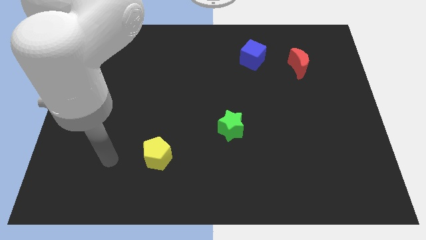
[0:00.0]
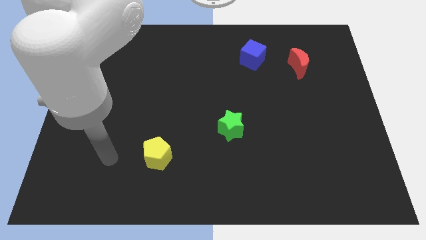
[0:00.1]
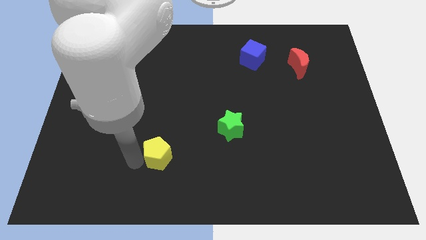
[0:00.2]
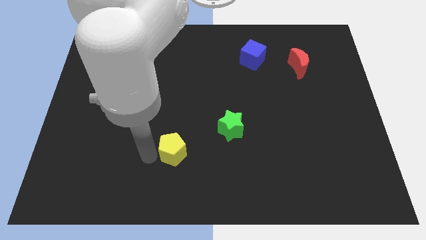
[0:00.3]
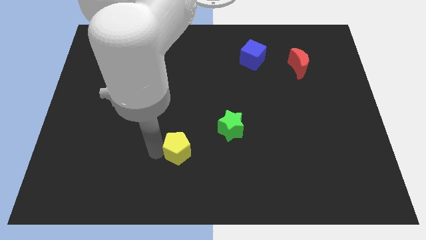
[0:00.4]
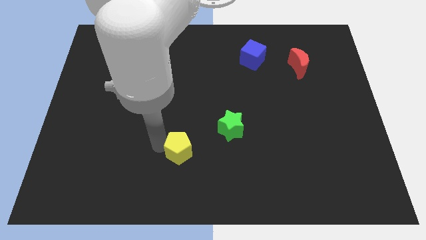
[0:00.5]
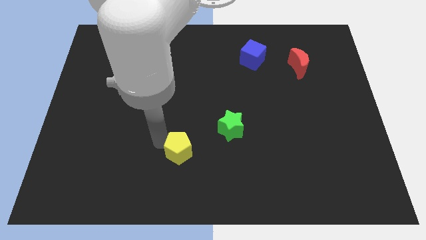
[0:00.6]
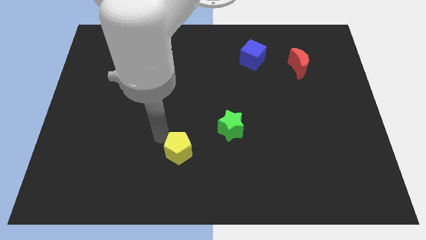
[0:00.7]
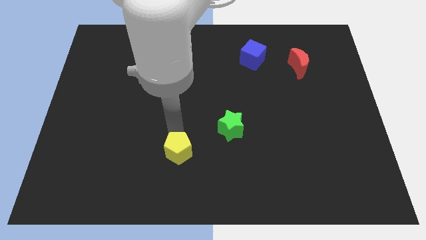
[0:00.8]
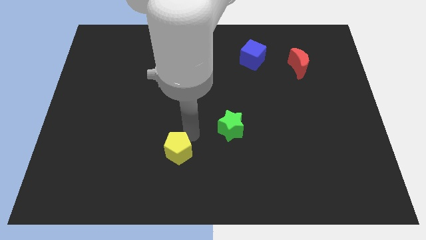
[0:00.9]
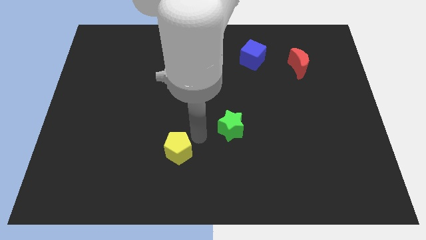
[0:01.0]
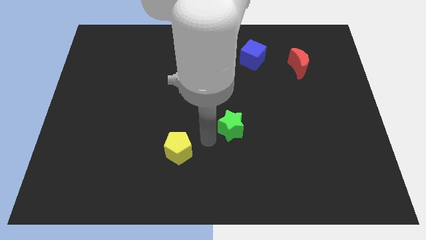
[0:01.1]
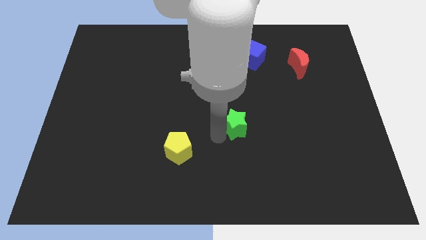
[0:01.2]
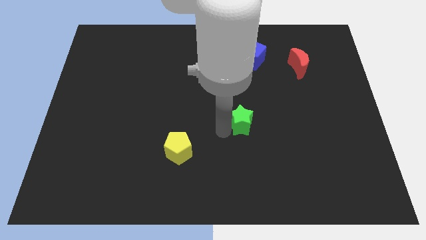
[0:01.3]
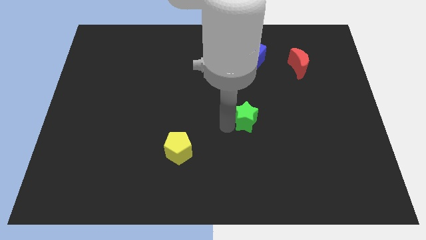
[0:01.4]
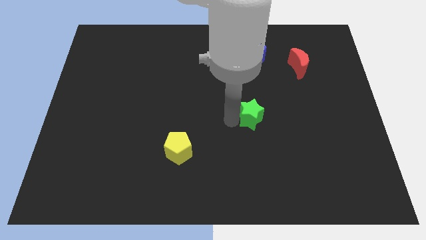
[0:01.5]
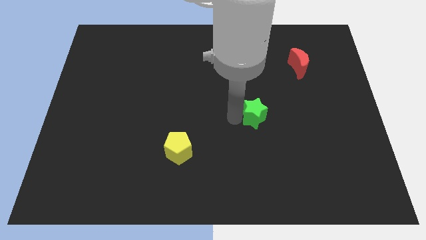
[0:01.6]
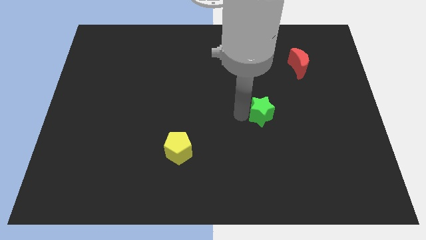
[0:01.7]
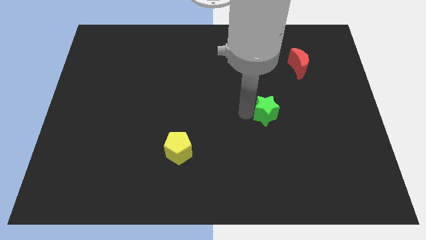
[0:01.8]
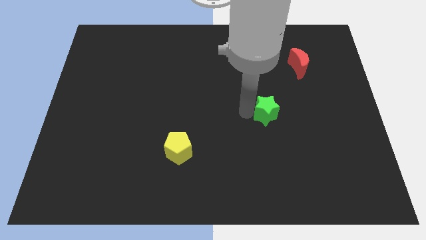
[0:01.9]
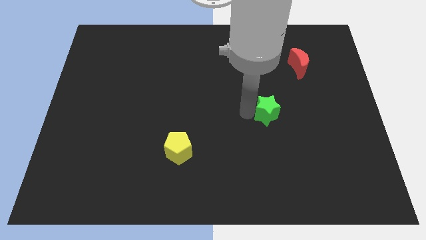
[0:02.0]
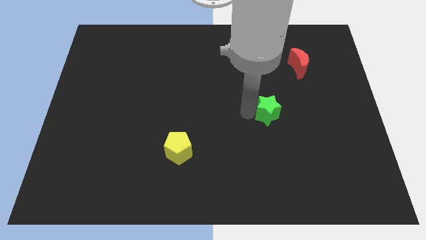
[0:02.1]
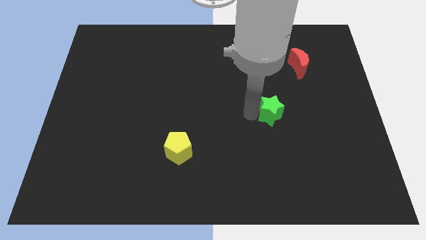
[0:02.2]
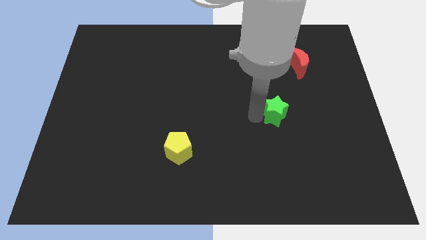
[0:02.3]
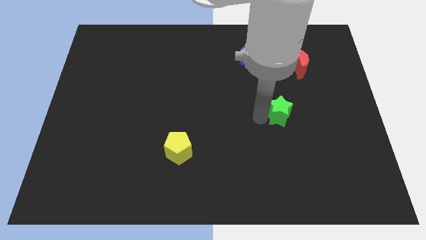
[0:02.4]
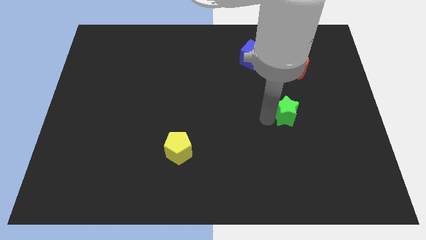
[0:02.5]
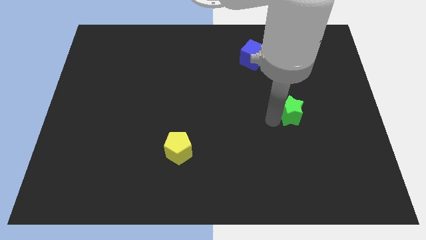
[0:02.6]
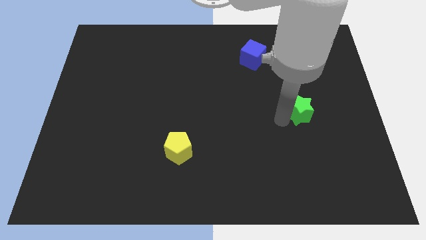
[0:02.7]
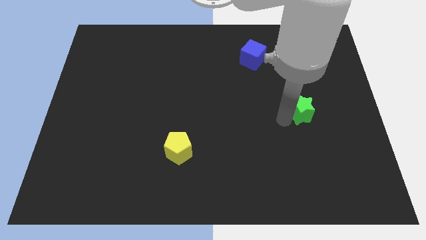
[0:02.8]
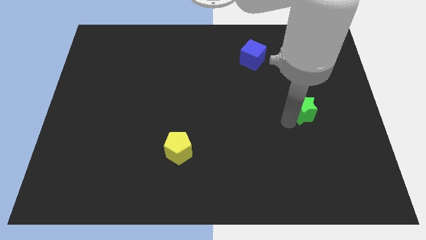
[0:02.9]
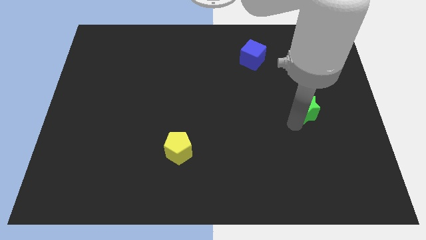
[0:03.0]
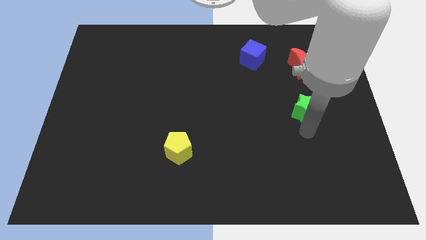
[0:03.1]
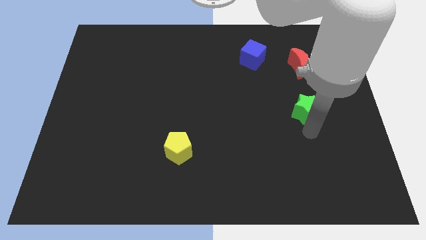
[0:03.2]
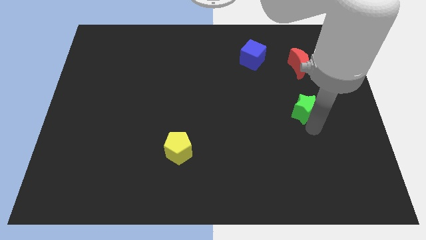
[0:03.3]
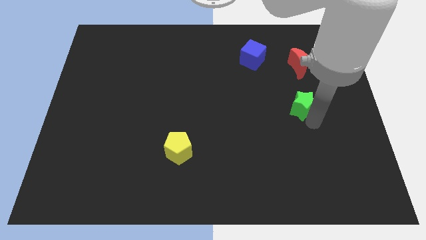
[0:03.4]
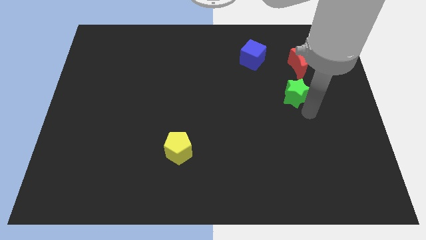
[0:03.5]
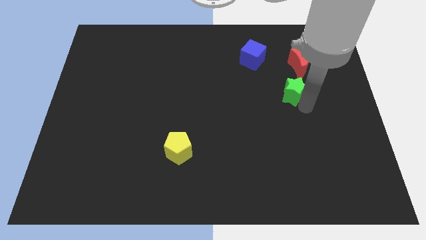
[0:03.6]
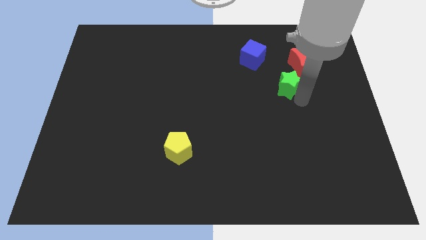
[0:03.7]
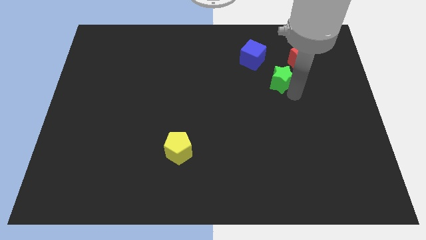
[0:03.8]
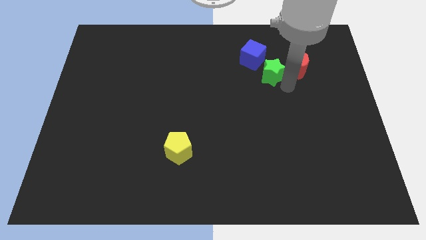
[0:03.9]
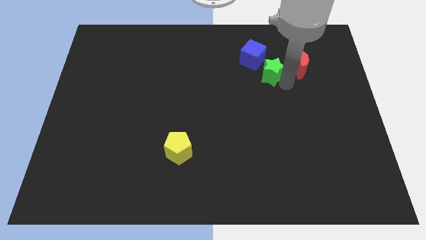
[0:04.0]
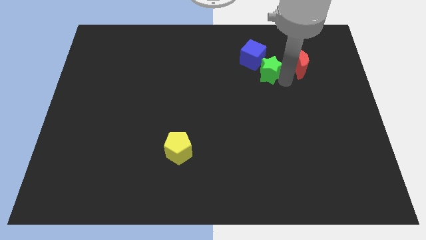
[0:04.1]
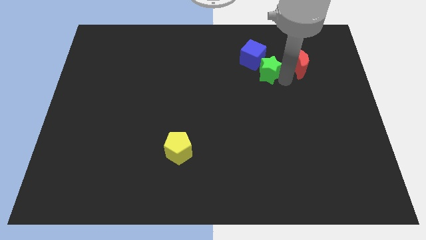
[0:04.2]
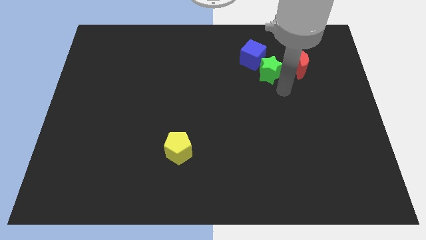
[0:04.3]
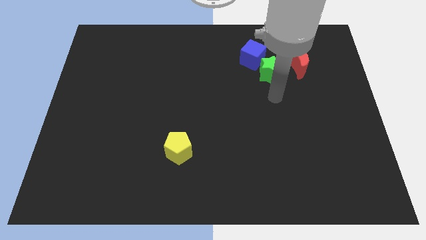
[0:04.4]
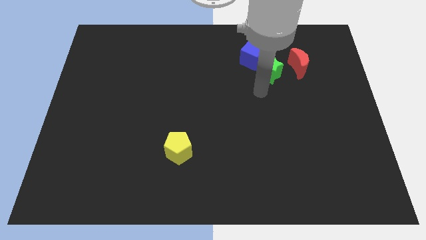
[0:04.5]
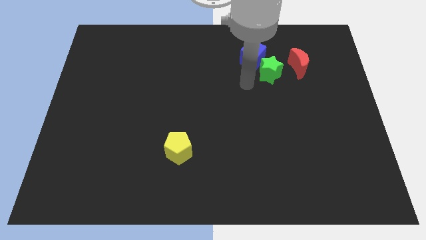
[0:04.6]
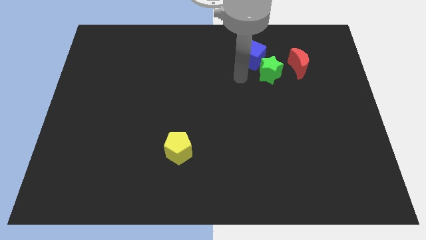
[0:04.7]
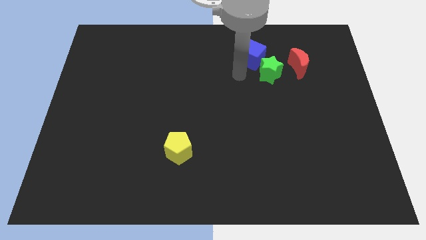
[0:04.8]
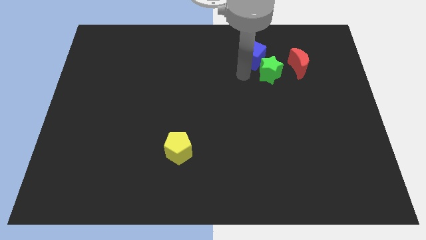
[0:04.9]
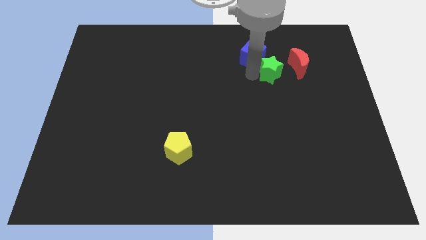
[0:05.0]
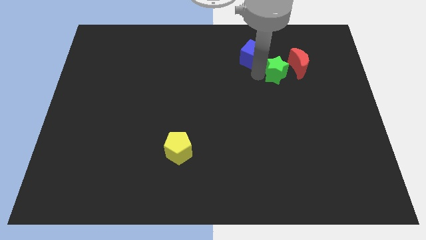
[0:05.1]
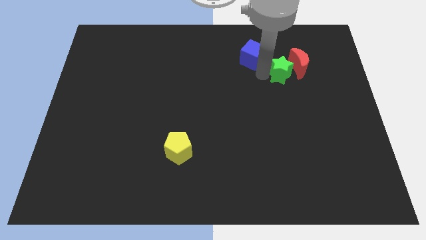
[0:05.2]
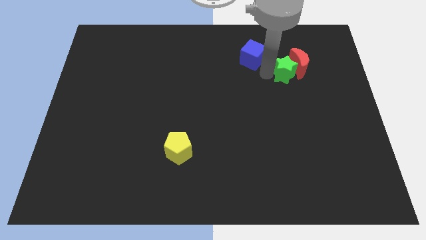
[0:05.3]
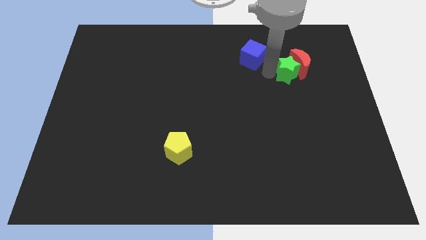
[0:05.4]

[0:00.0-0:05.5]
slide the green star close to the red block

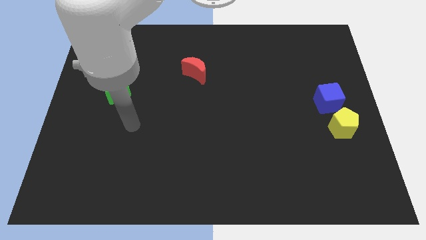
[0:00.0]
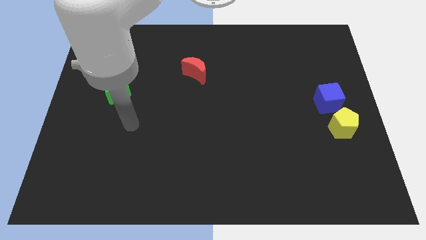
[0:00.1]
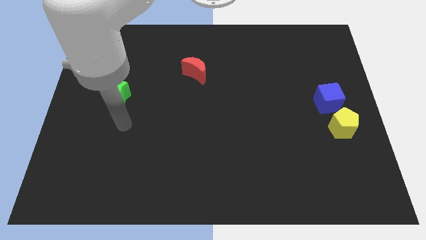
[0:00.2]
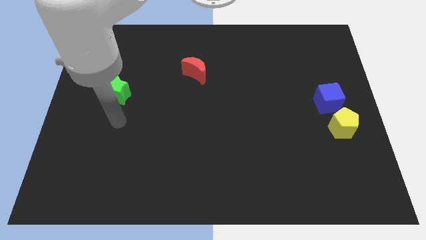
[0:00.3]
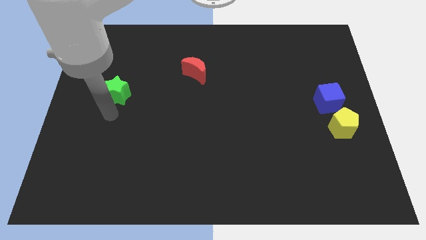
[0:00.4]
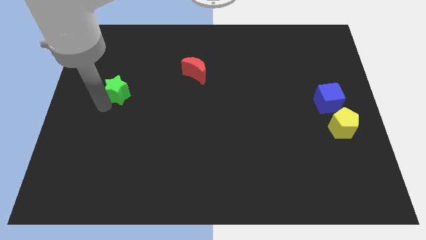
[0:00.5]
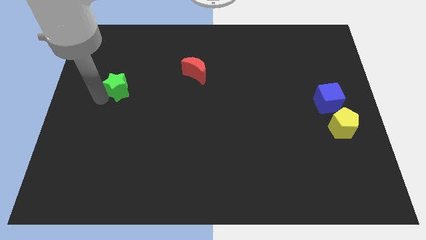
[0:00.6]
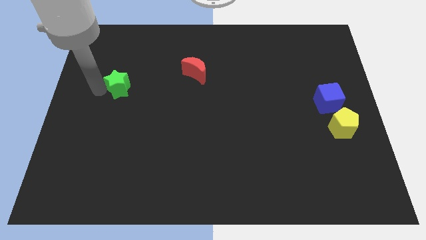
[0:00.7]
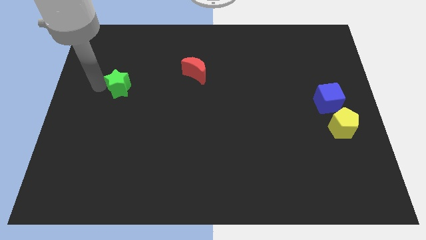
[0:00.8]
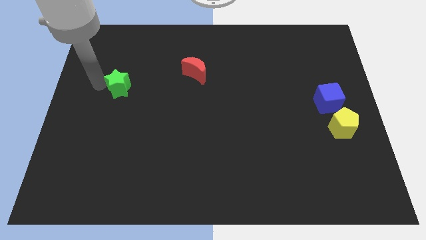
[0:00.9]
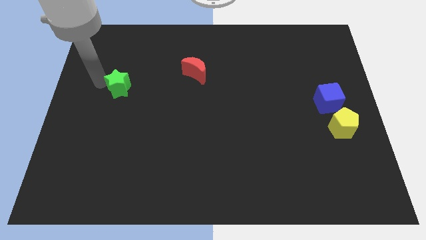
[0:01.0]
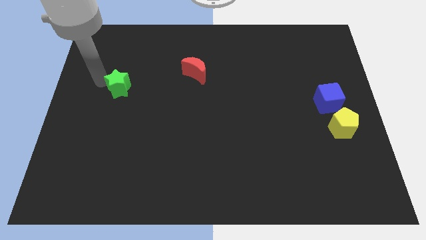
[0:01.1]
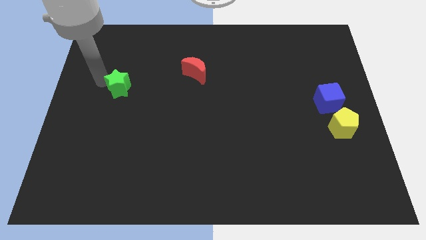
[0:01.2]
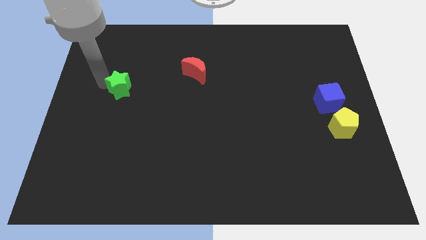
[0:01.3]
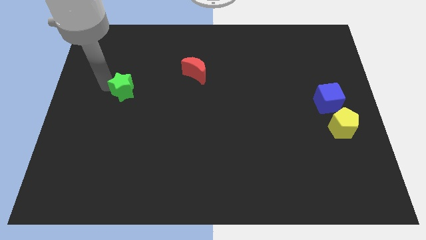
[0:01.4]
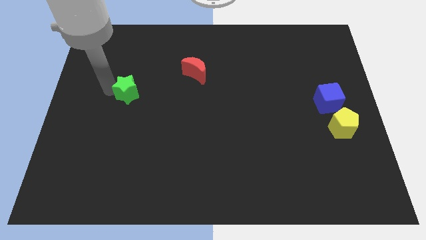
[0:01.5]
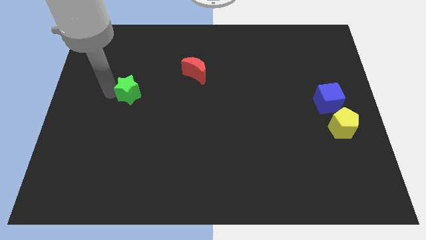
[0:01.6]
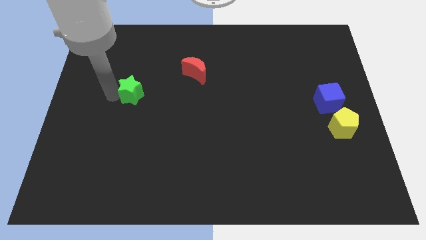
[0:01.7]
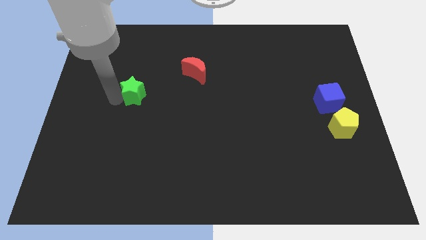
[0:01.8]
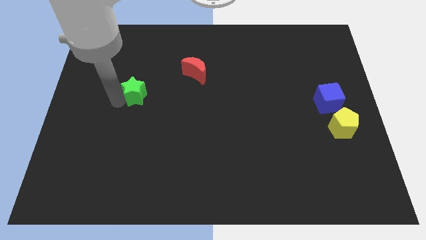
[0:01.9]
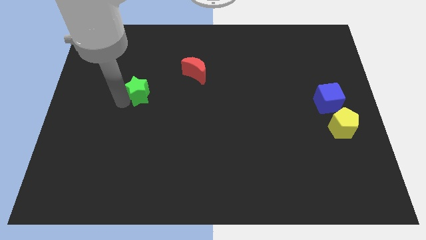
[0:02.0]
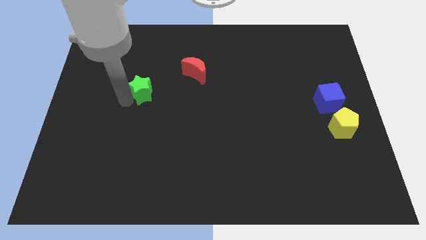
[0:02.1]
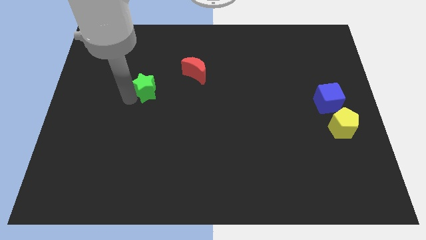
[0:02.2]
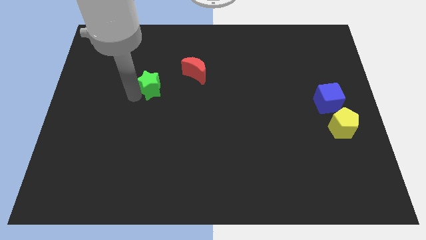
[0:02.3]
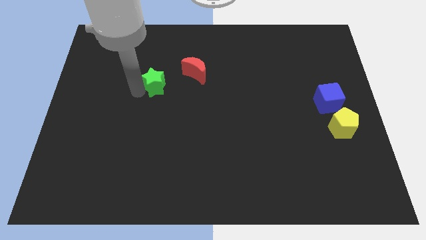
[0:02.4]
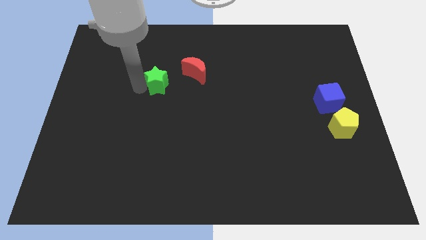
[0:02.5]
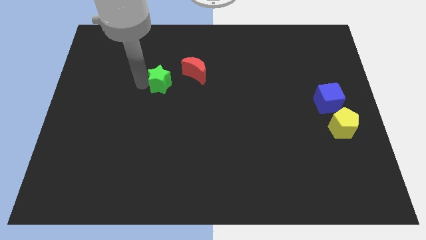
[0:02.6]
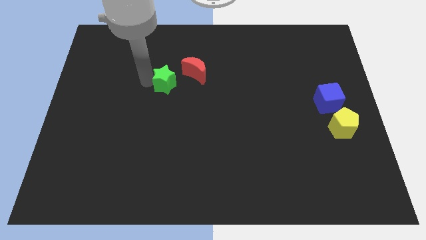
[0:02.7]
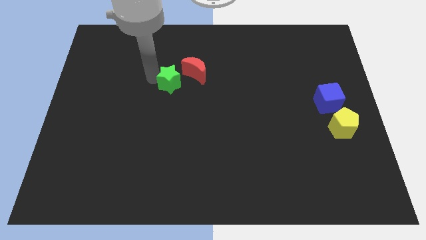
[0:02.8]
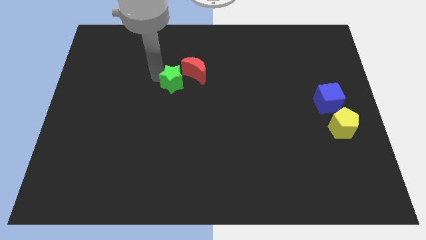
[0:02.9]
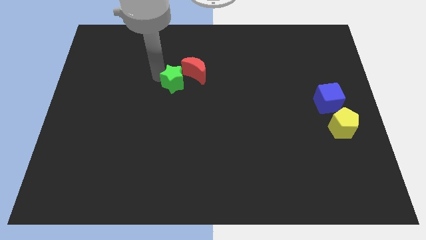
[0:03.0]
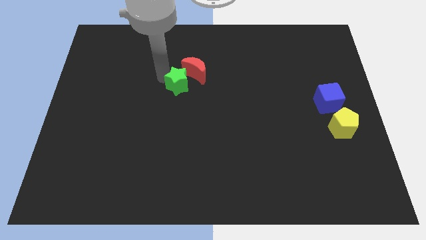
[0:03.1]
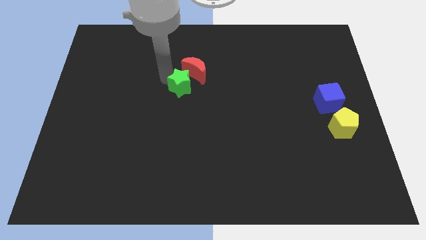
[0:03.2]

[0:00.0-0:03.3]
slide the star next to the red block
